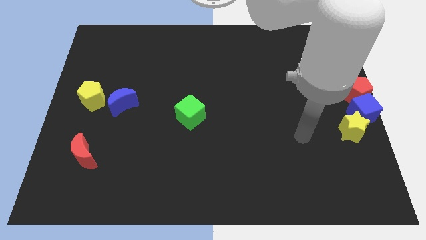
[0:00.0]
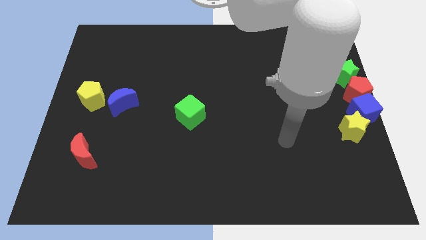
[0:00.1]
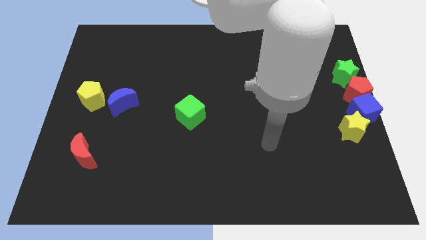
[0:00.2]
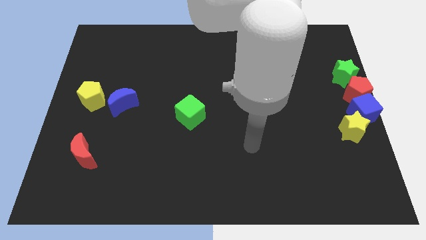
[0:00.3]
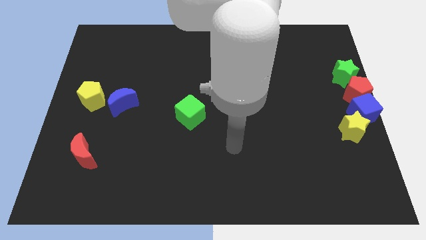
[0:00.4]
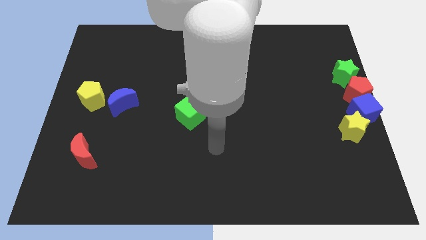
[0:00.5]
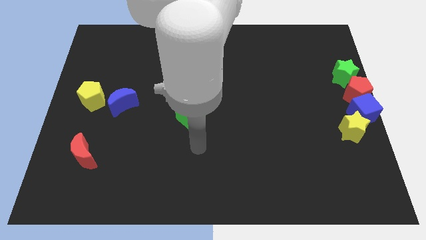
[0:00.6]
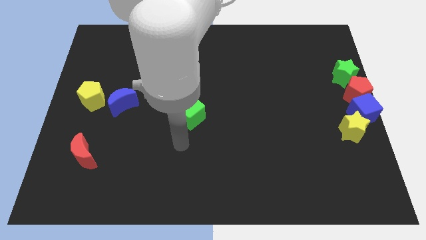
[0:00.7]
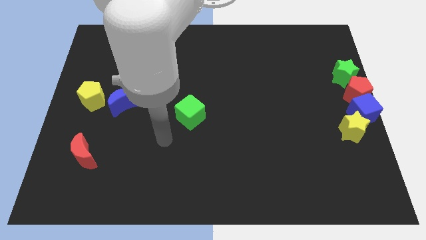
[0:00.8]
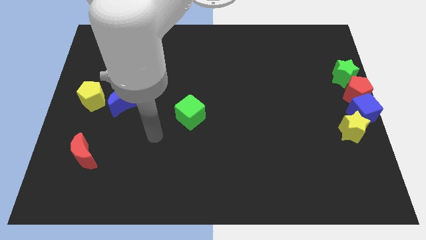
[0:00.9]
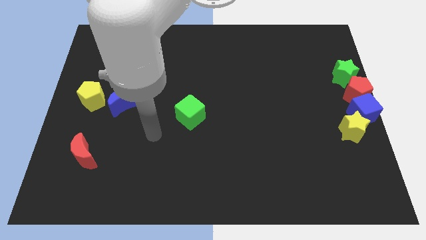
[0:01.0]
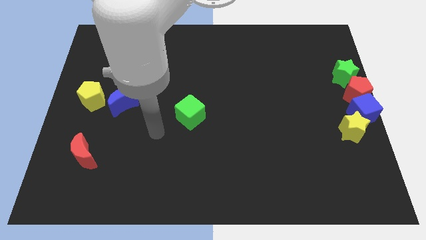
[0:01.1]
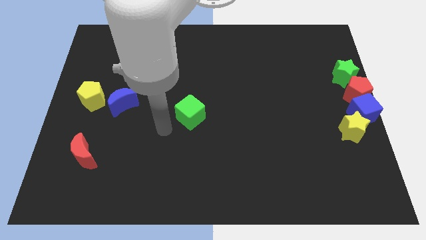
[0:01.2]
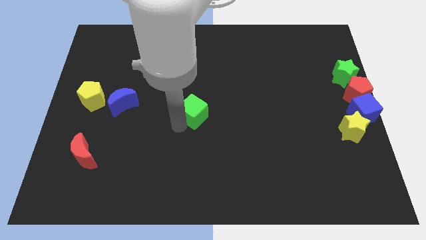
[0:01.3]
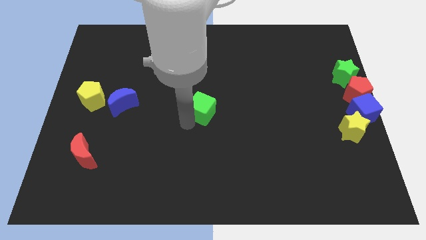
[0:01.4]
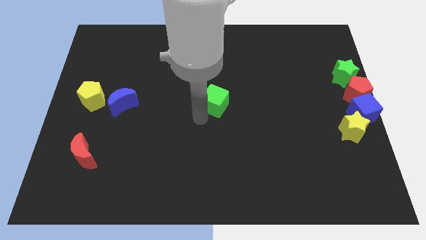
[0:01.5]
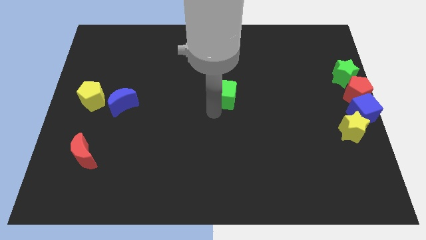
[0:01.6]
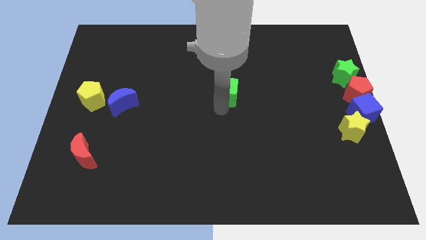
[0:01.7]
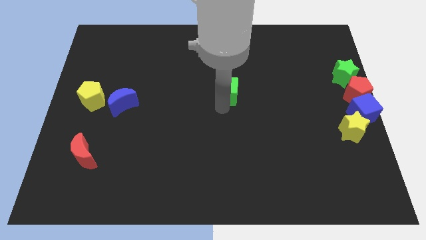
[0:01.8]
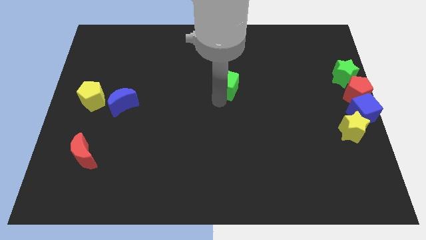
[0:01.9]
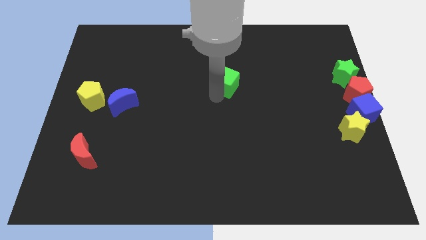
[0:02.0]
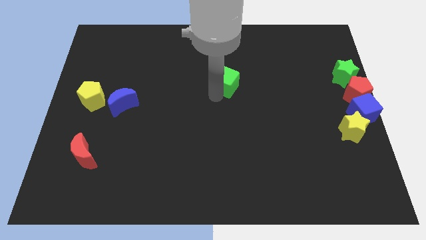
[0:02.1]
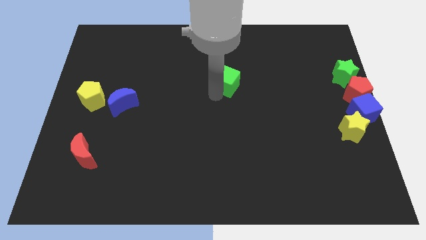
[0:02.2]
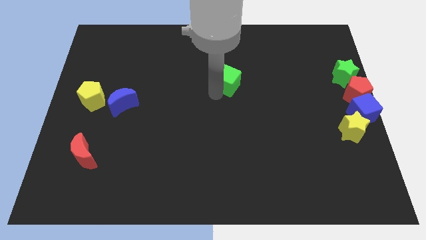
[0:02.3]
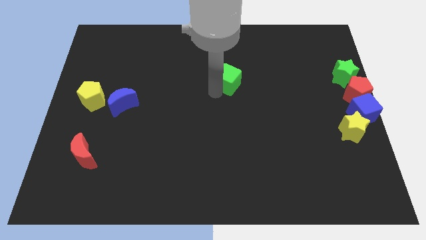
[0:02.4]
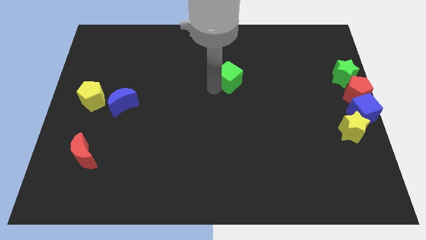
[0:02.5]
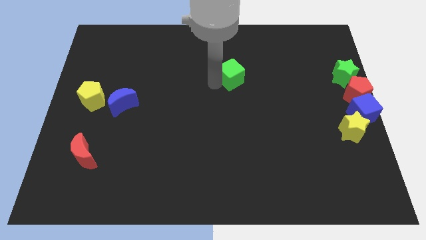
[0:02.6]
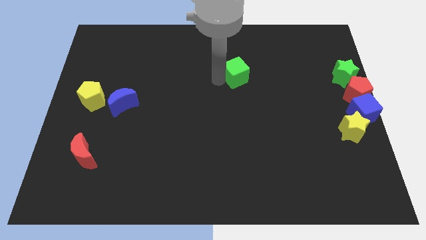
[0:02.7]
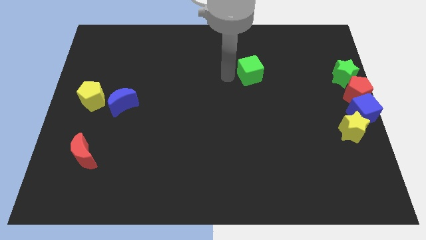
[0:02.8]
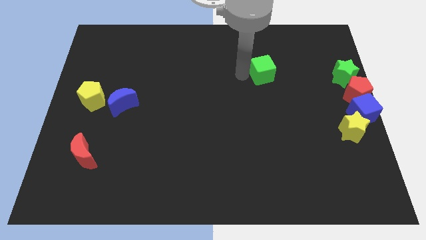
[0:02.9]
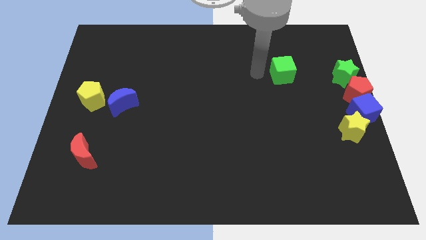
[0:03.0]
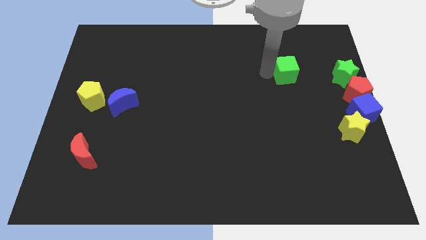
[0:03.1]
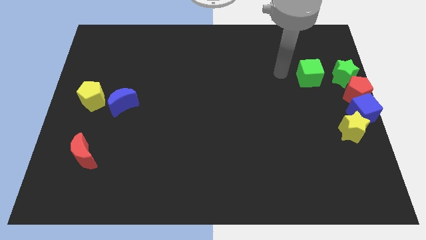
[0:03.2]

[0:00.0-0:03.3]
push the green cube to the left of the green star

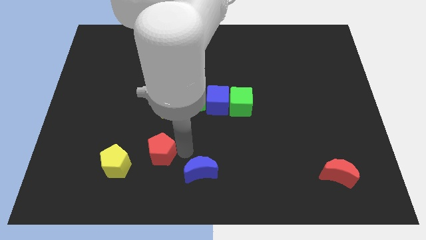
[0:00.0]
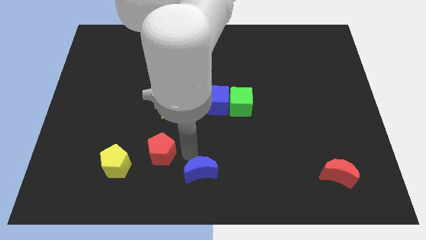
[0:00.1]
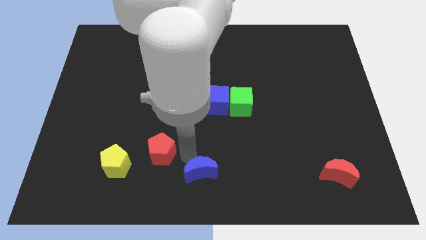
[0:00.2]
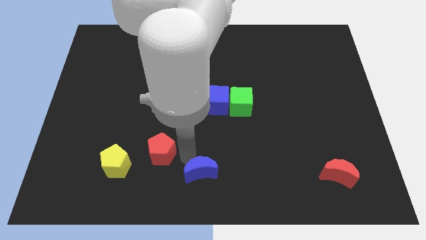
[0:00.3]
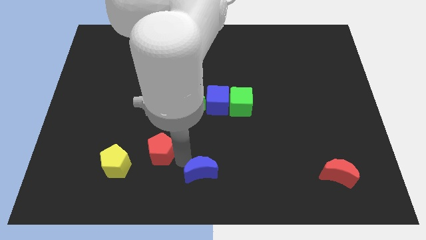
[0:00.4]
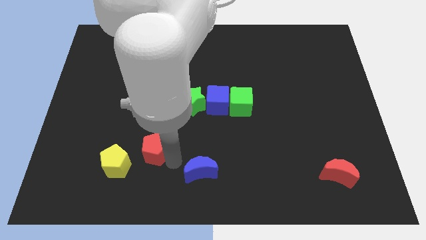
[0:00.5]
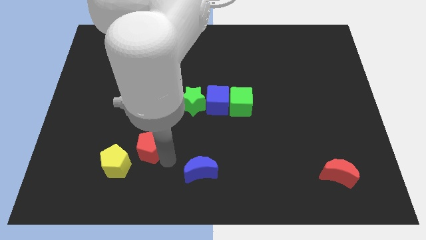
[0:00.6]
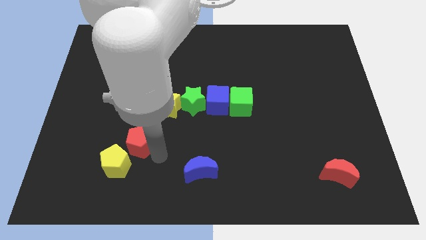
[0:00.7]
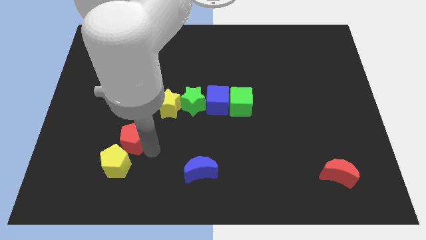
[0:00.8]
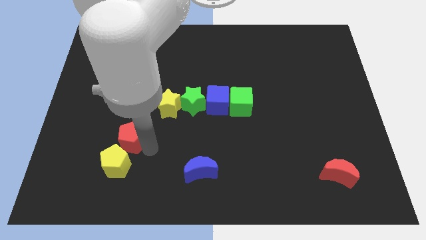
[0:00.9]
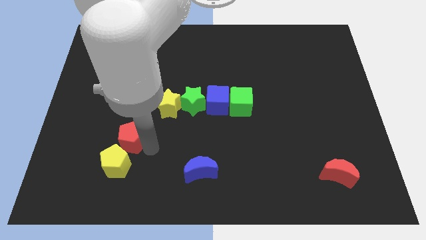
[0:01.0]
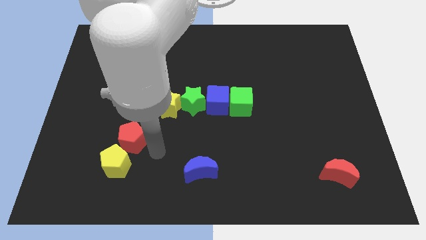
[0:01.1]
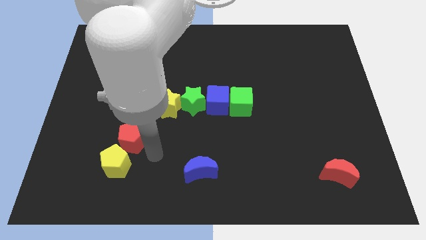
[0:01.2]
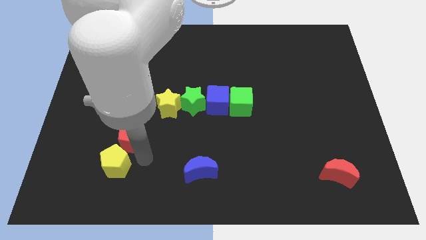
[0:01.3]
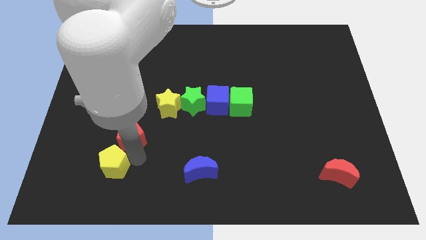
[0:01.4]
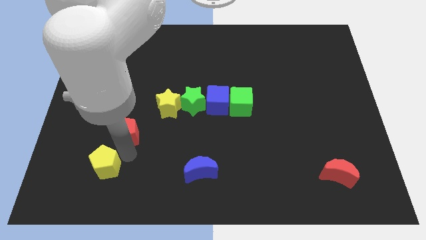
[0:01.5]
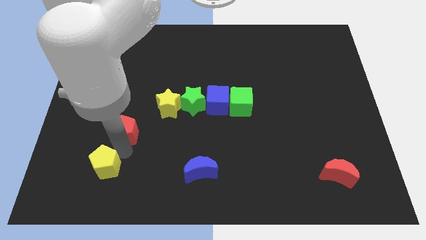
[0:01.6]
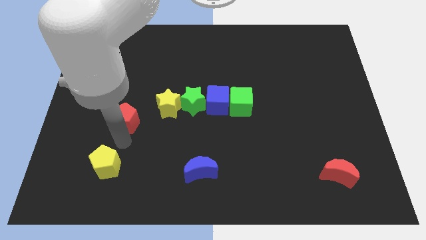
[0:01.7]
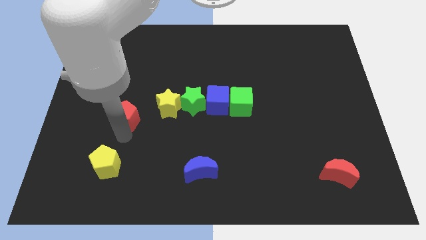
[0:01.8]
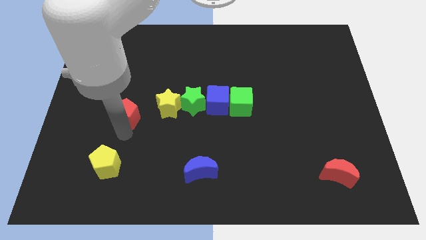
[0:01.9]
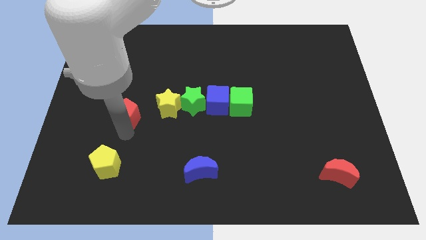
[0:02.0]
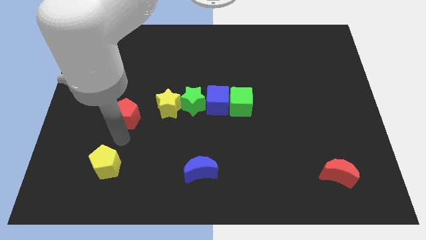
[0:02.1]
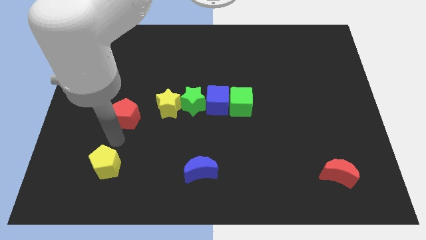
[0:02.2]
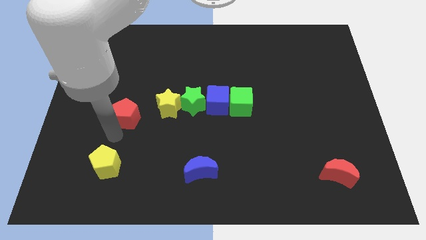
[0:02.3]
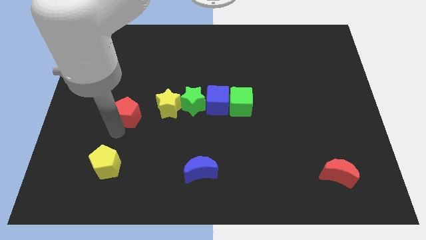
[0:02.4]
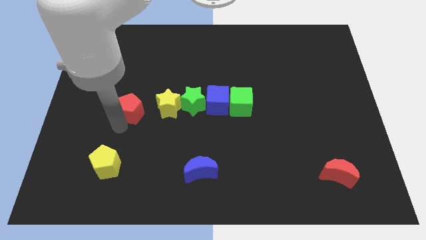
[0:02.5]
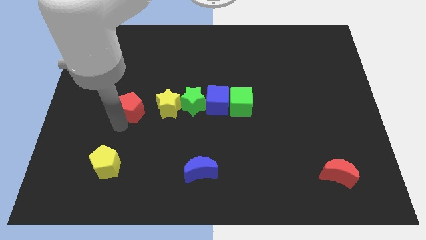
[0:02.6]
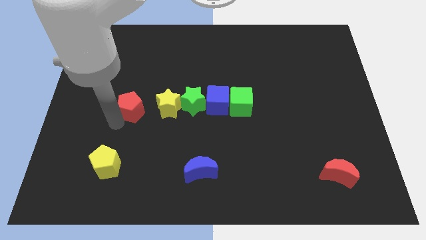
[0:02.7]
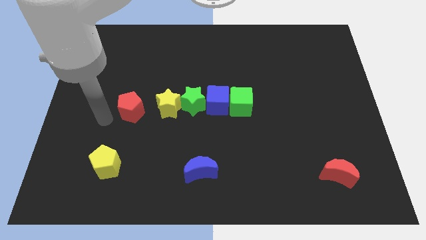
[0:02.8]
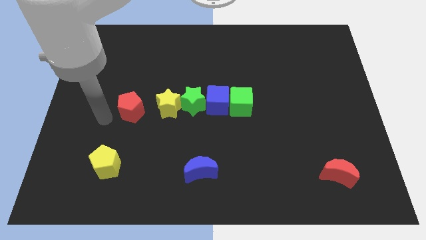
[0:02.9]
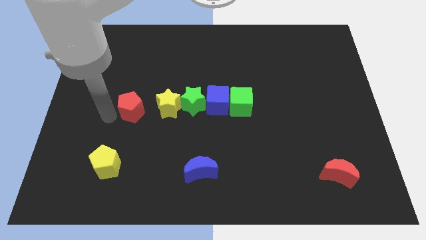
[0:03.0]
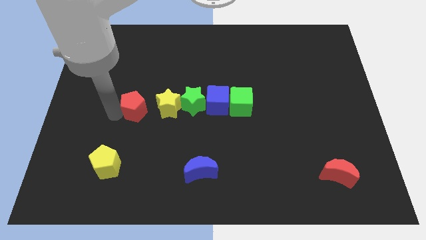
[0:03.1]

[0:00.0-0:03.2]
move the red pentagon to the left of the yellow star

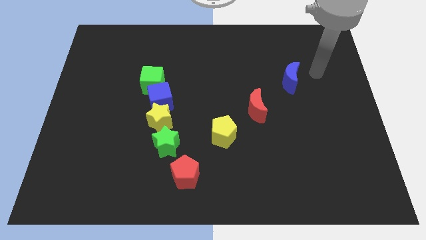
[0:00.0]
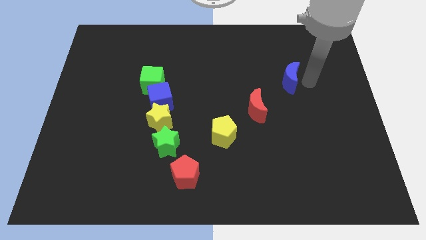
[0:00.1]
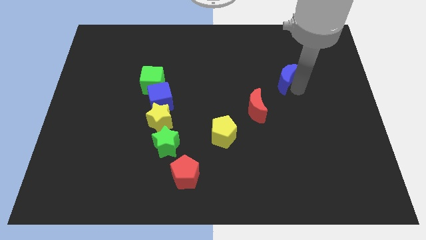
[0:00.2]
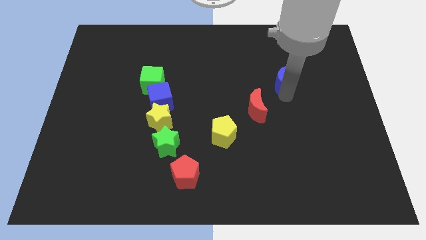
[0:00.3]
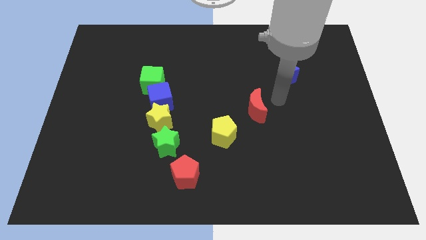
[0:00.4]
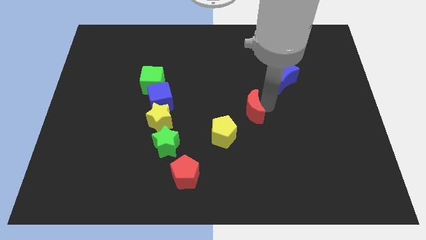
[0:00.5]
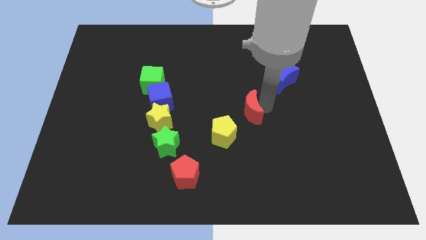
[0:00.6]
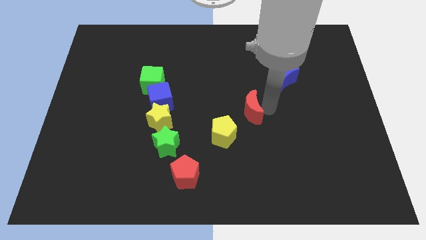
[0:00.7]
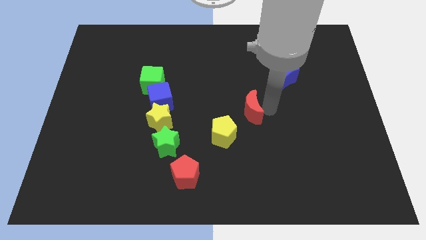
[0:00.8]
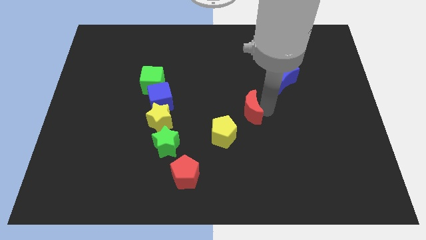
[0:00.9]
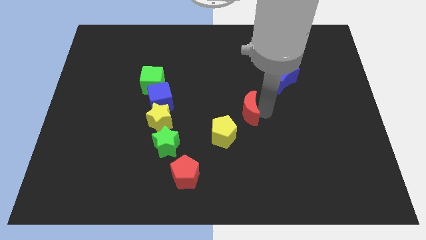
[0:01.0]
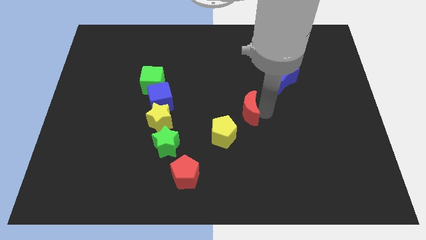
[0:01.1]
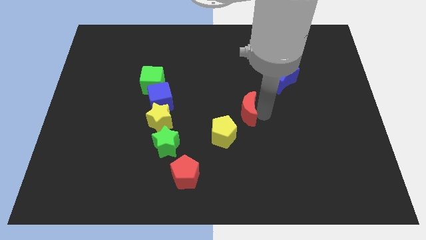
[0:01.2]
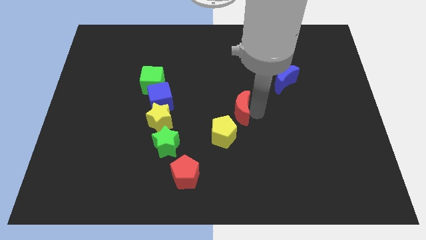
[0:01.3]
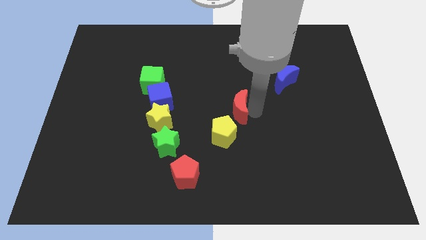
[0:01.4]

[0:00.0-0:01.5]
move the red moon to the left side

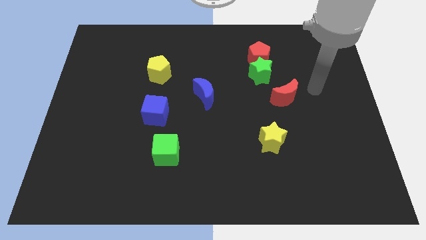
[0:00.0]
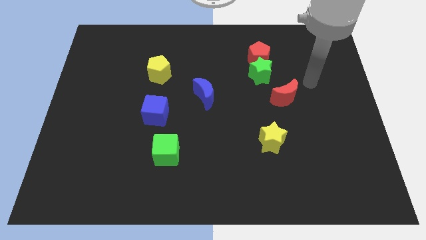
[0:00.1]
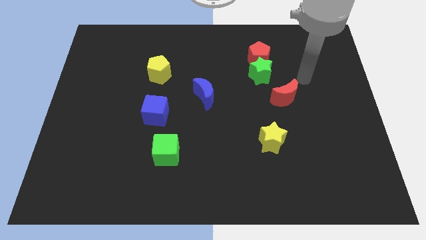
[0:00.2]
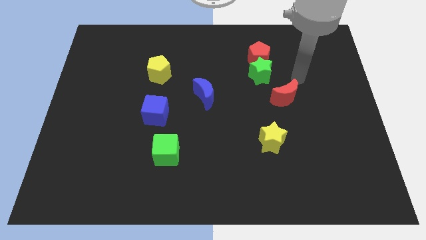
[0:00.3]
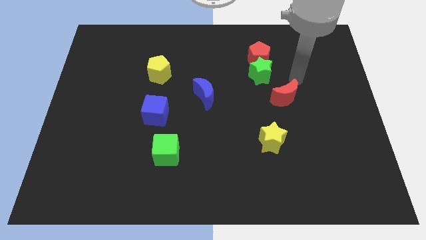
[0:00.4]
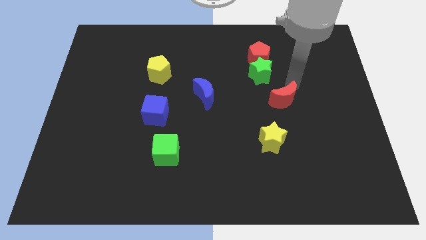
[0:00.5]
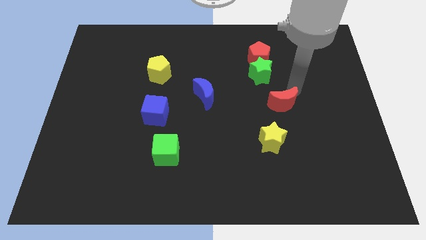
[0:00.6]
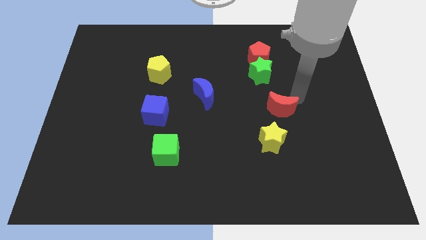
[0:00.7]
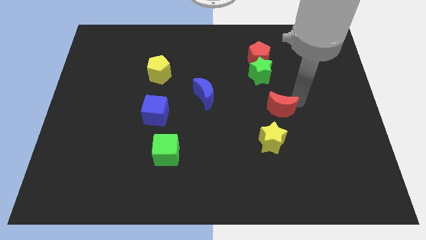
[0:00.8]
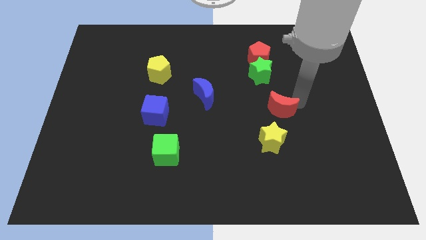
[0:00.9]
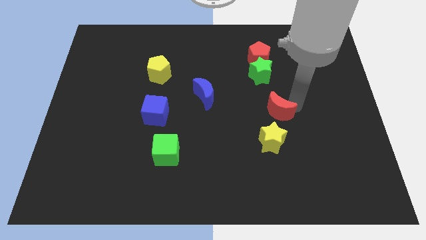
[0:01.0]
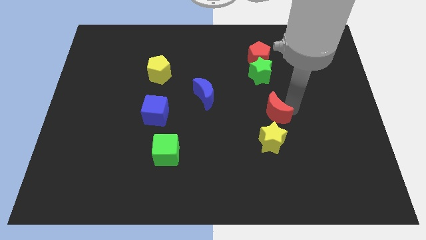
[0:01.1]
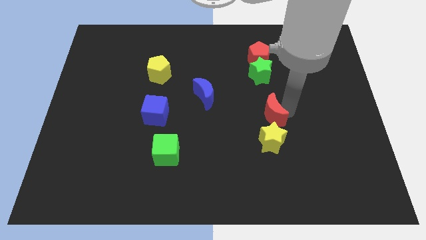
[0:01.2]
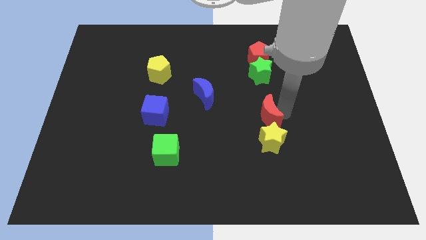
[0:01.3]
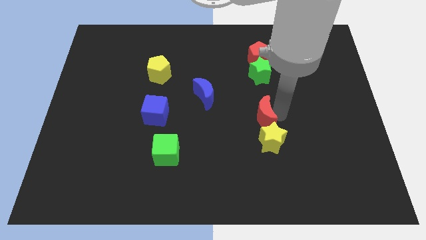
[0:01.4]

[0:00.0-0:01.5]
move the red moon close to the yellow star
